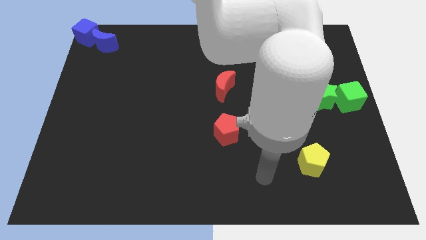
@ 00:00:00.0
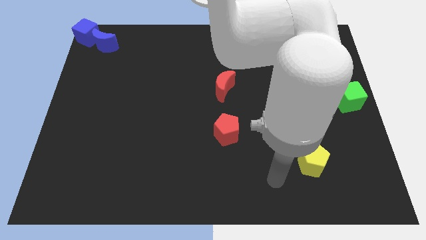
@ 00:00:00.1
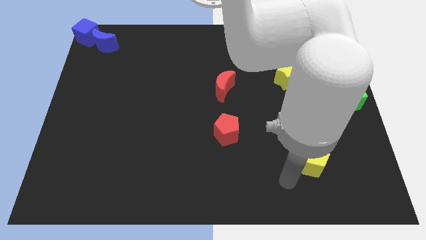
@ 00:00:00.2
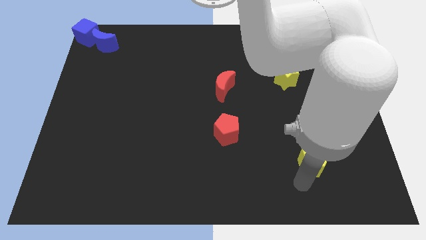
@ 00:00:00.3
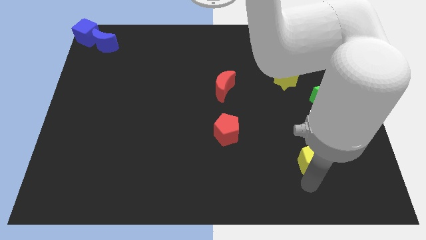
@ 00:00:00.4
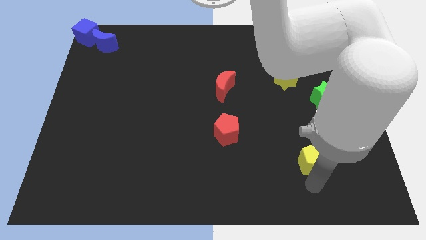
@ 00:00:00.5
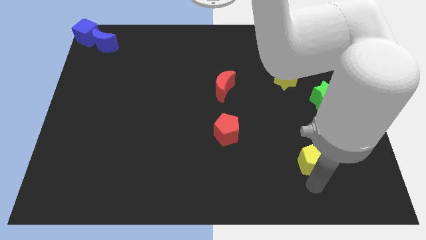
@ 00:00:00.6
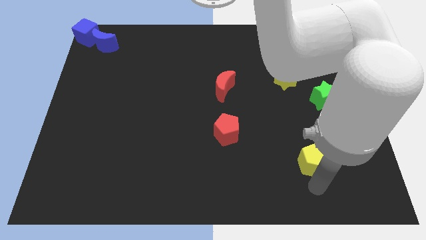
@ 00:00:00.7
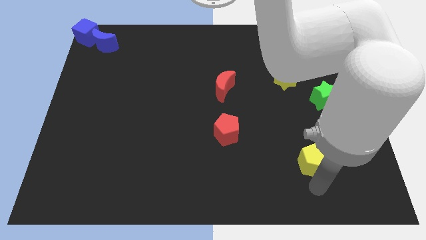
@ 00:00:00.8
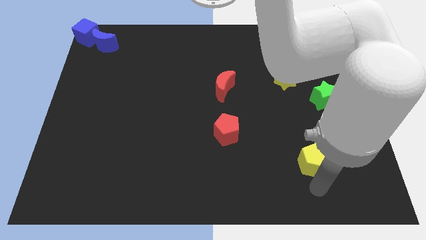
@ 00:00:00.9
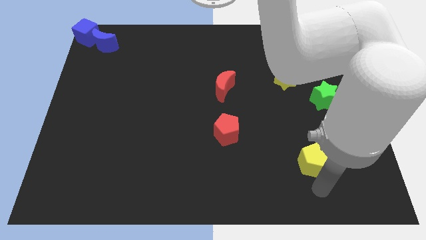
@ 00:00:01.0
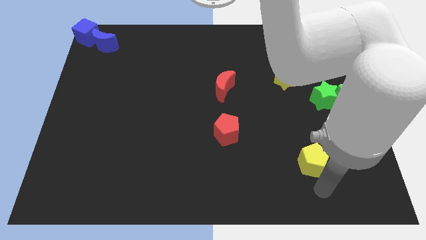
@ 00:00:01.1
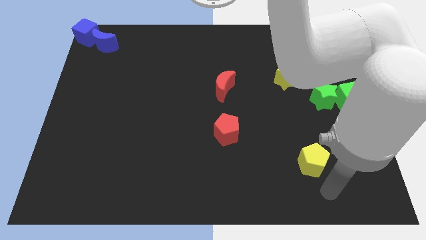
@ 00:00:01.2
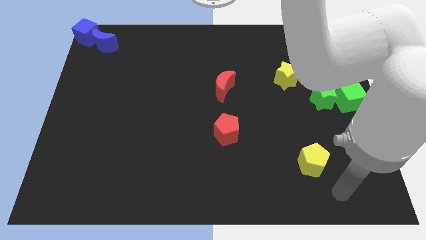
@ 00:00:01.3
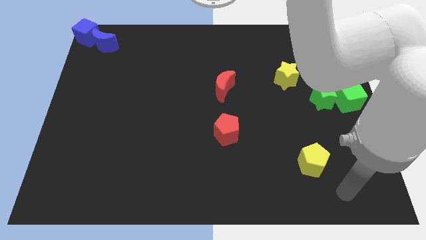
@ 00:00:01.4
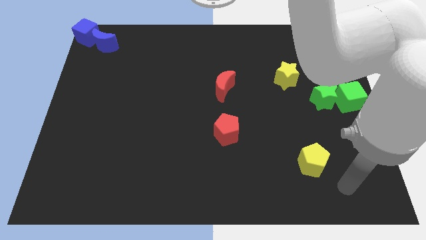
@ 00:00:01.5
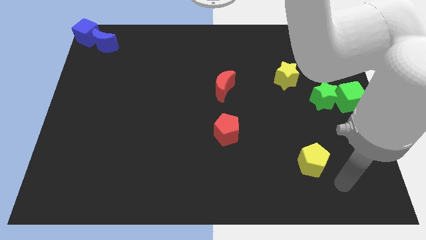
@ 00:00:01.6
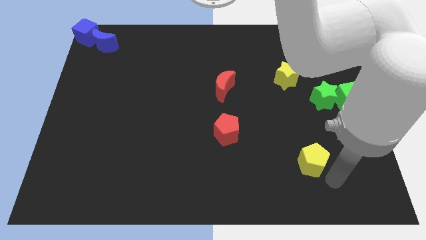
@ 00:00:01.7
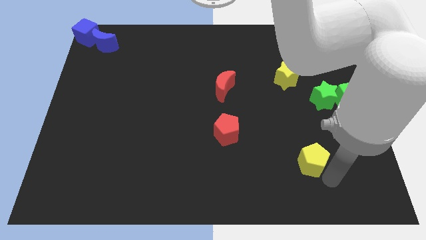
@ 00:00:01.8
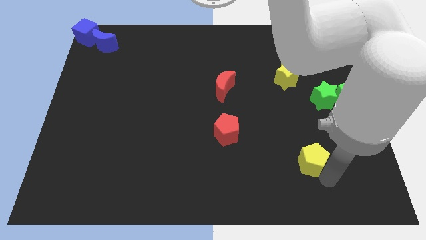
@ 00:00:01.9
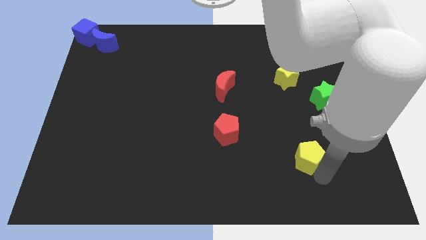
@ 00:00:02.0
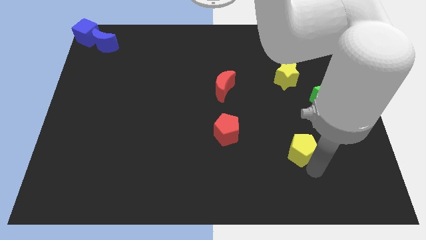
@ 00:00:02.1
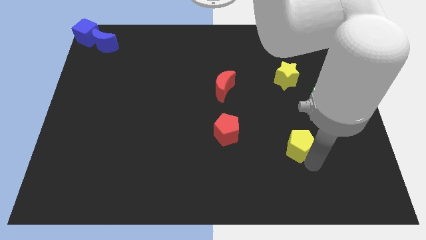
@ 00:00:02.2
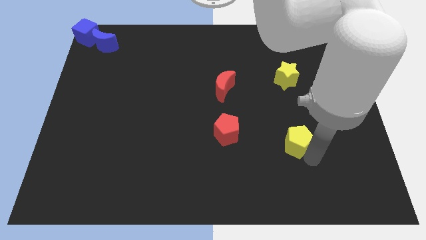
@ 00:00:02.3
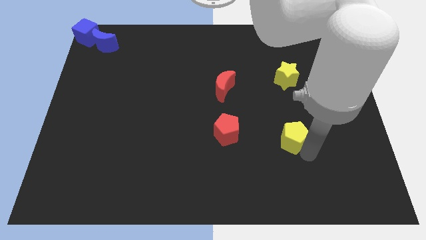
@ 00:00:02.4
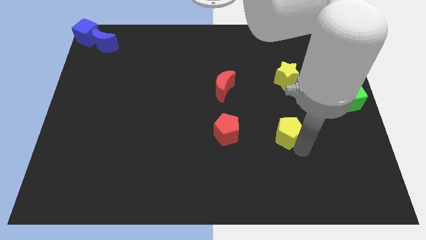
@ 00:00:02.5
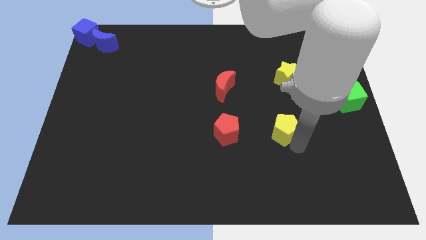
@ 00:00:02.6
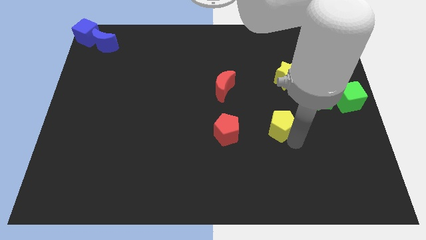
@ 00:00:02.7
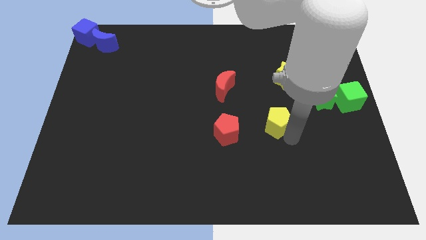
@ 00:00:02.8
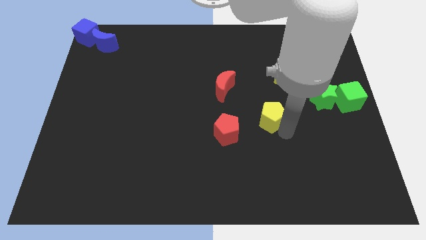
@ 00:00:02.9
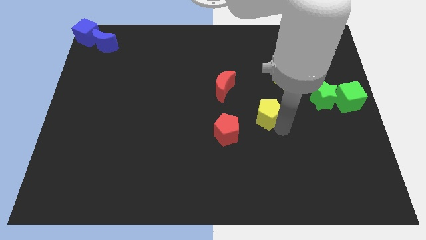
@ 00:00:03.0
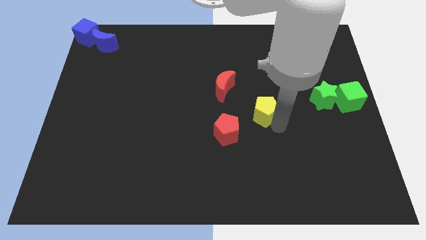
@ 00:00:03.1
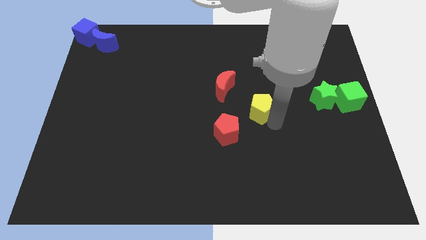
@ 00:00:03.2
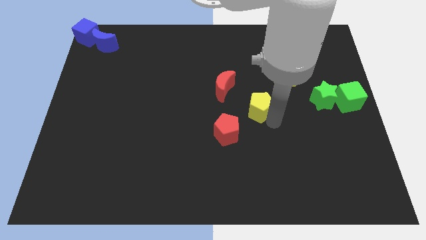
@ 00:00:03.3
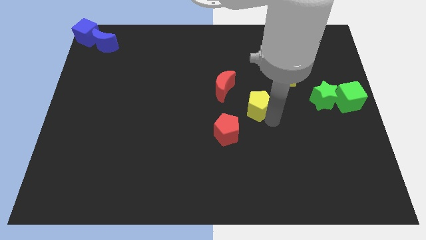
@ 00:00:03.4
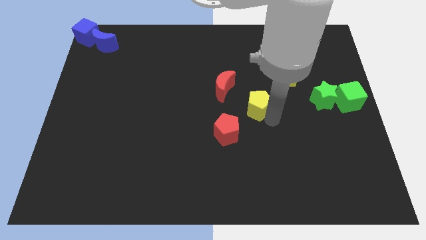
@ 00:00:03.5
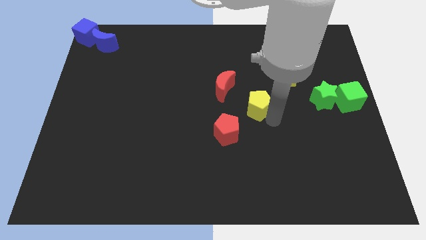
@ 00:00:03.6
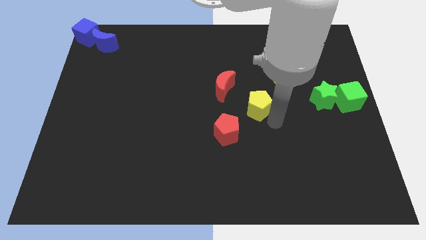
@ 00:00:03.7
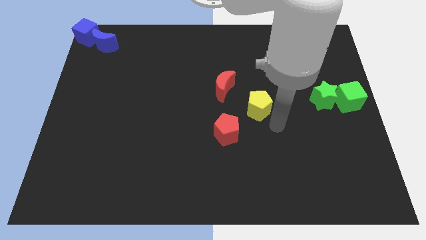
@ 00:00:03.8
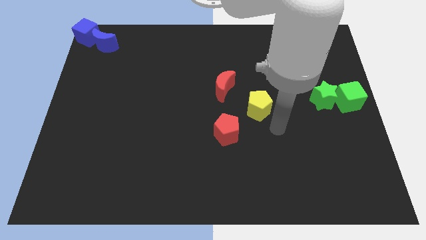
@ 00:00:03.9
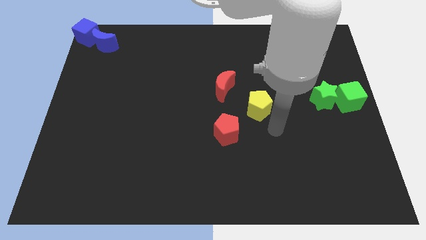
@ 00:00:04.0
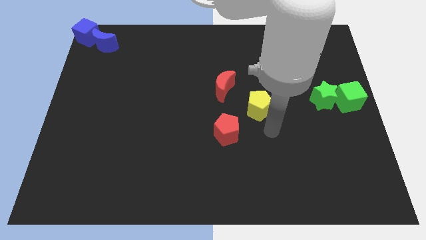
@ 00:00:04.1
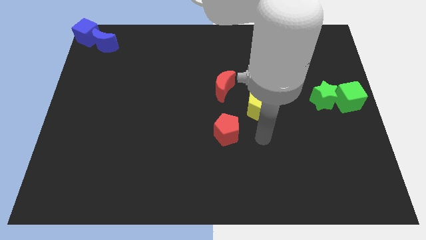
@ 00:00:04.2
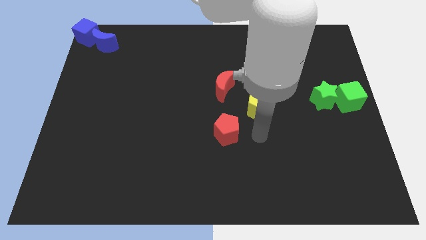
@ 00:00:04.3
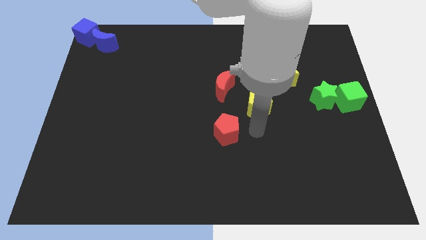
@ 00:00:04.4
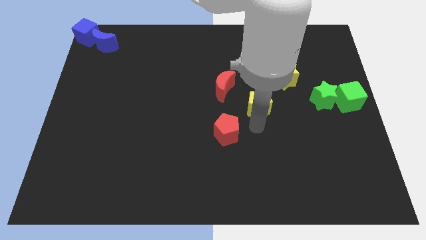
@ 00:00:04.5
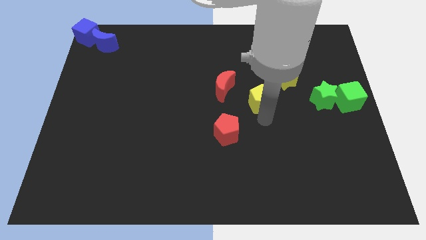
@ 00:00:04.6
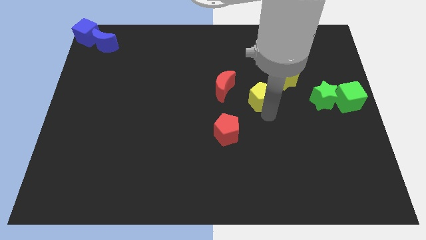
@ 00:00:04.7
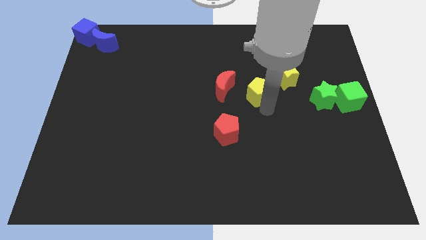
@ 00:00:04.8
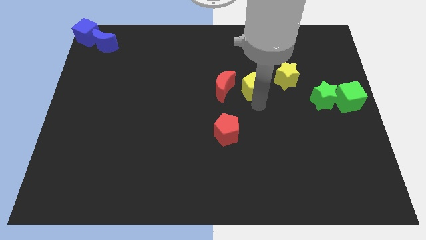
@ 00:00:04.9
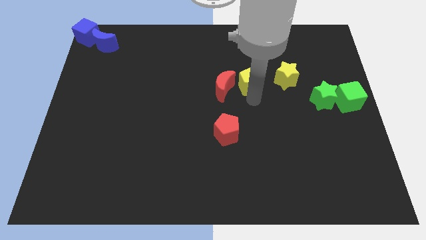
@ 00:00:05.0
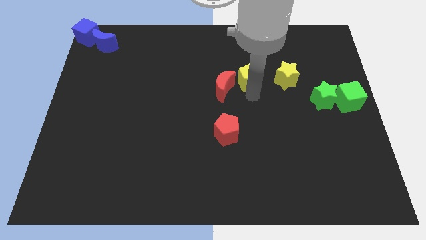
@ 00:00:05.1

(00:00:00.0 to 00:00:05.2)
slide yellow pentagon to the right of red moon

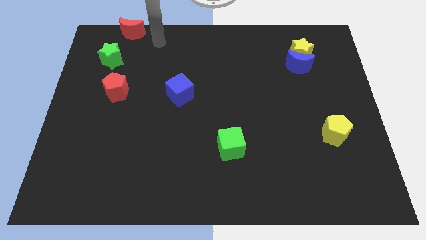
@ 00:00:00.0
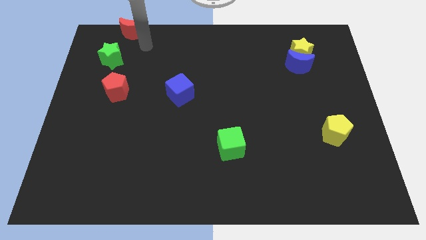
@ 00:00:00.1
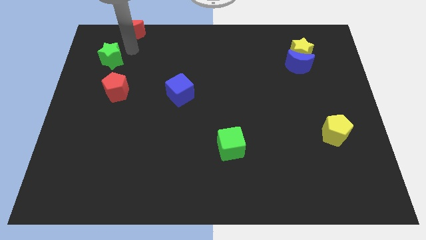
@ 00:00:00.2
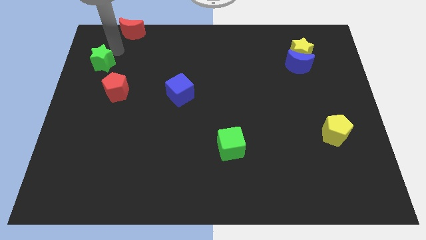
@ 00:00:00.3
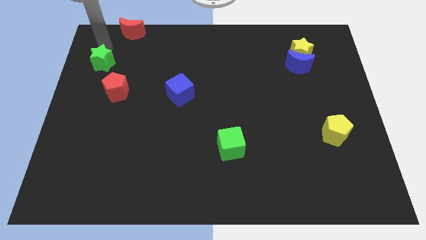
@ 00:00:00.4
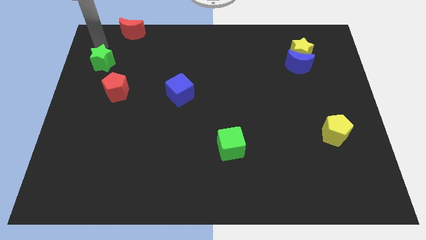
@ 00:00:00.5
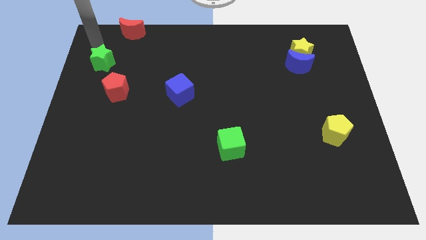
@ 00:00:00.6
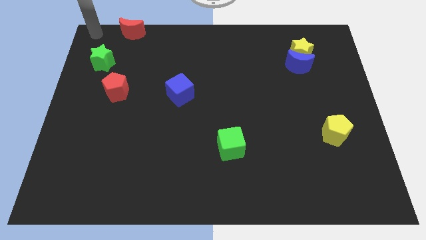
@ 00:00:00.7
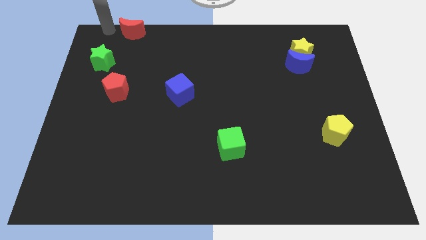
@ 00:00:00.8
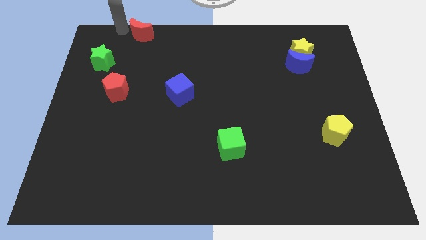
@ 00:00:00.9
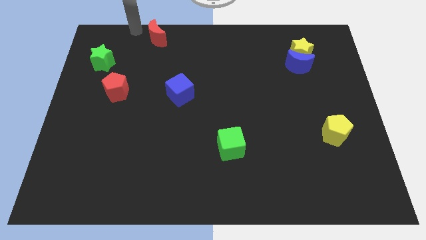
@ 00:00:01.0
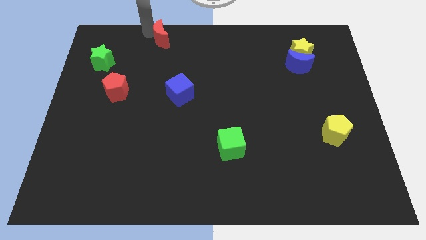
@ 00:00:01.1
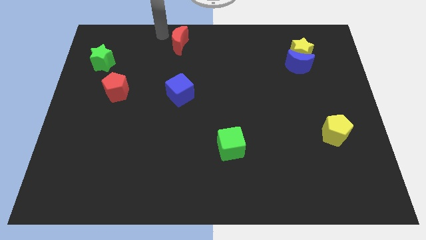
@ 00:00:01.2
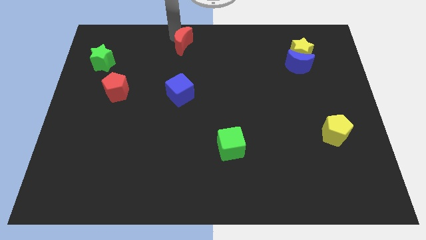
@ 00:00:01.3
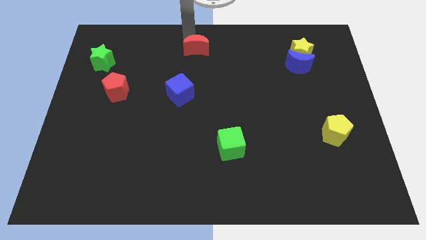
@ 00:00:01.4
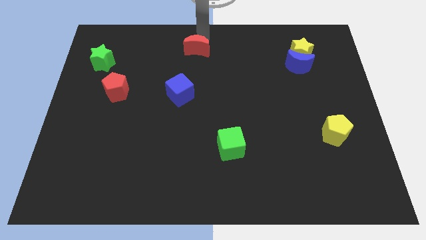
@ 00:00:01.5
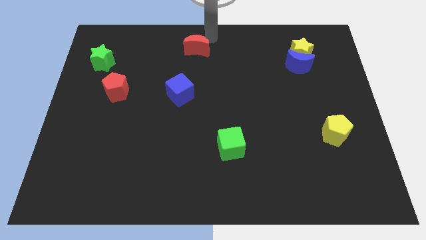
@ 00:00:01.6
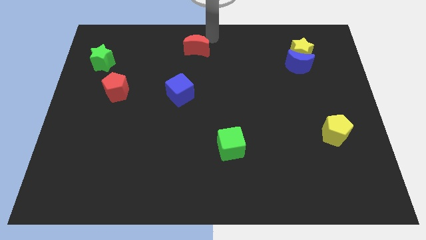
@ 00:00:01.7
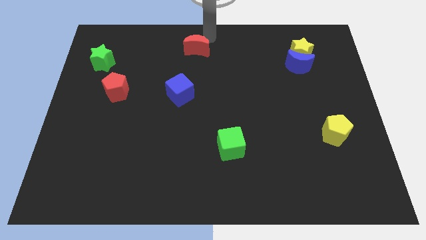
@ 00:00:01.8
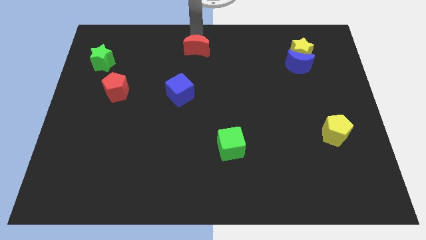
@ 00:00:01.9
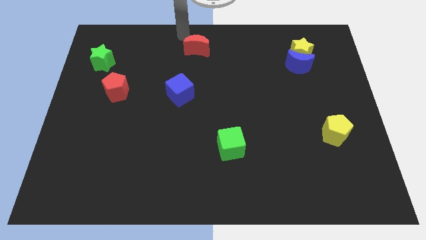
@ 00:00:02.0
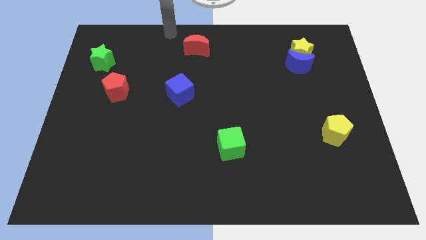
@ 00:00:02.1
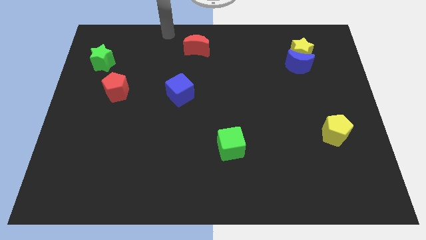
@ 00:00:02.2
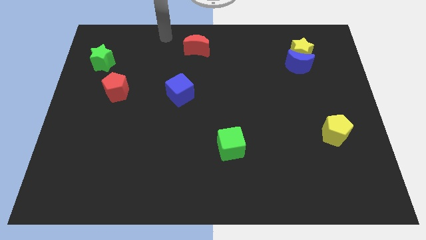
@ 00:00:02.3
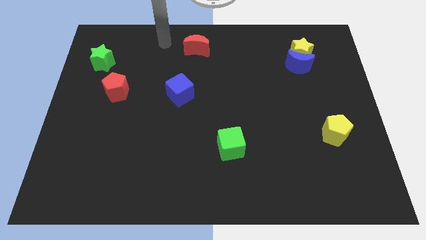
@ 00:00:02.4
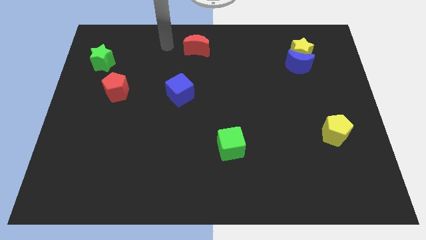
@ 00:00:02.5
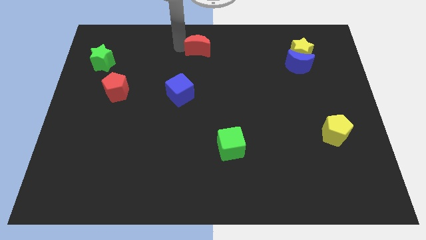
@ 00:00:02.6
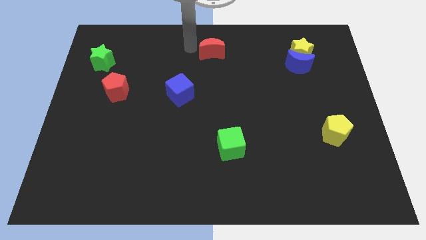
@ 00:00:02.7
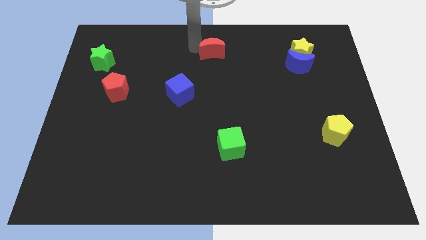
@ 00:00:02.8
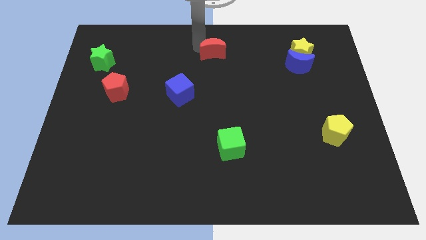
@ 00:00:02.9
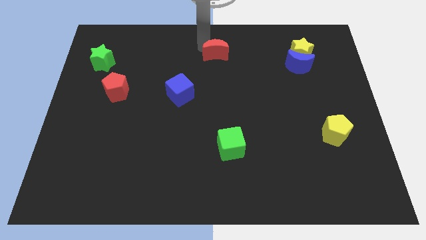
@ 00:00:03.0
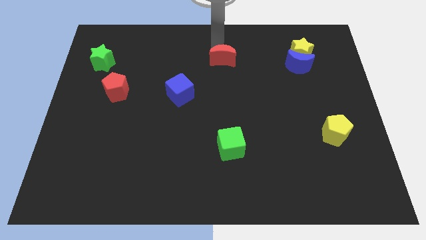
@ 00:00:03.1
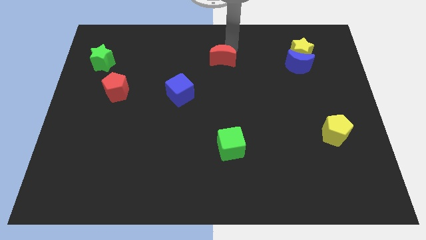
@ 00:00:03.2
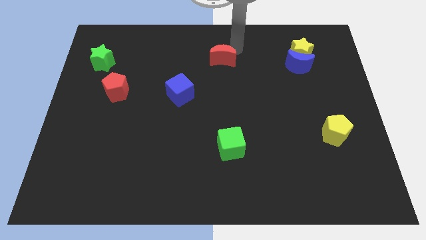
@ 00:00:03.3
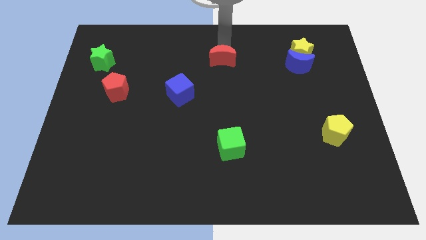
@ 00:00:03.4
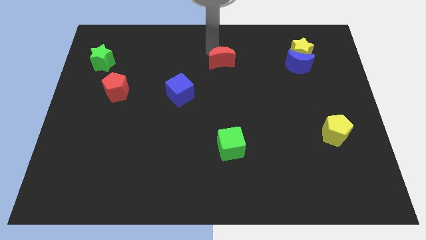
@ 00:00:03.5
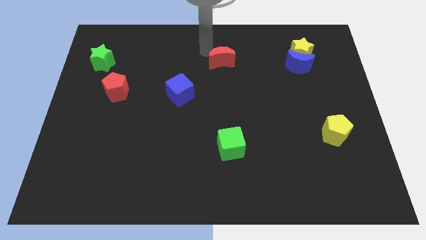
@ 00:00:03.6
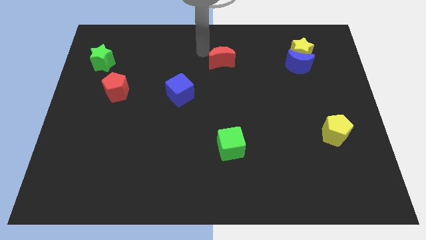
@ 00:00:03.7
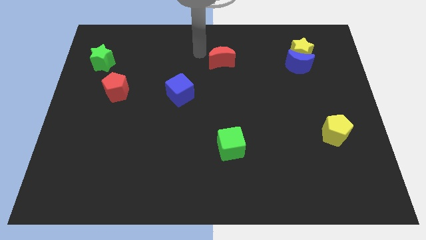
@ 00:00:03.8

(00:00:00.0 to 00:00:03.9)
move the red moon slightly to the top middle of the board
